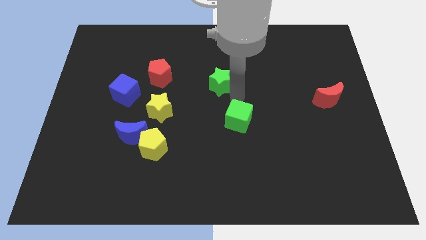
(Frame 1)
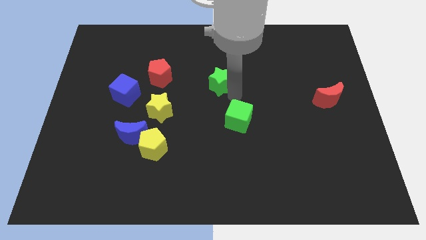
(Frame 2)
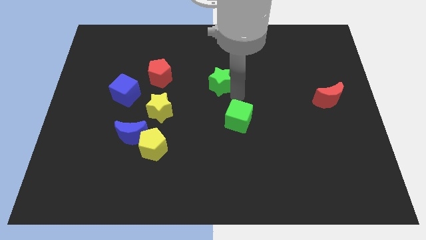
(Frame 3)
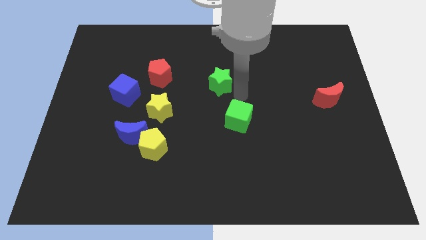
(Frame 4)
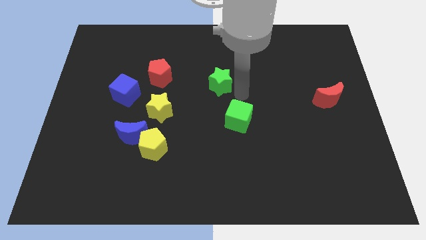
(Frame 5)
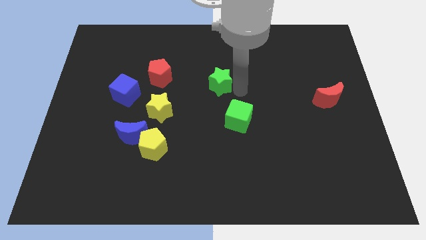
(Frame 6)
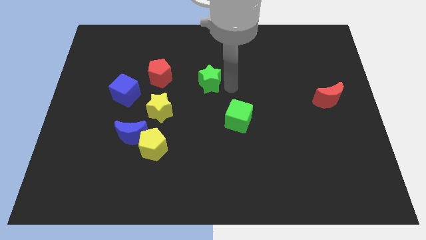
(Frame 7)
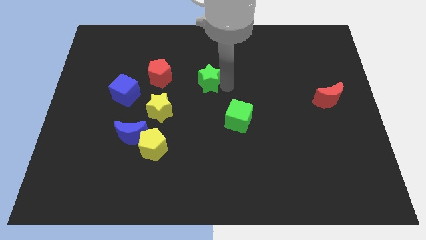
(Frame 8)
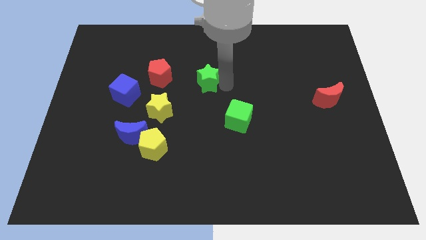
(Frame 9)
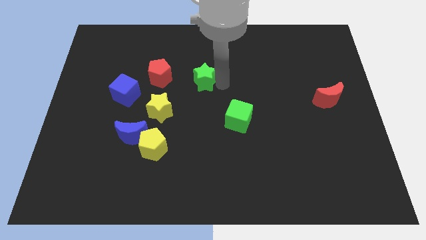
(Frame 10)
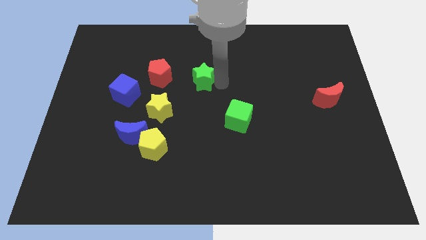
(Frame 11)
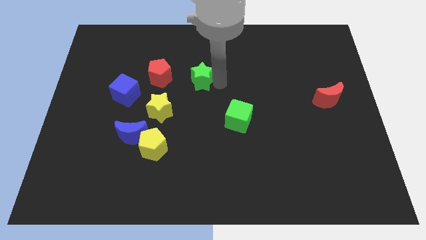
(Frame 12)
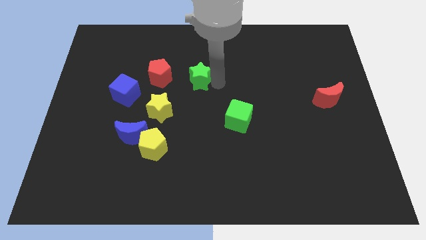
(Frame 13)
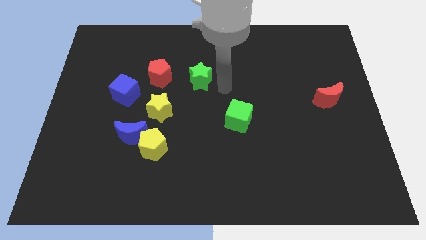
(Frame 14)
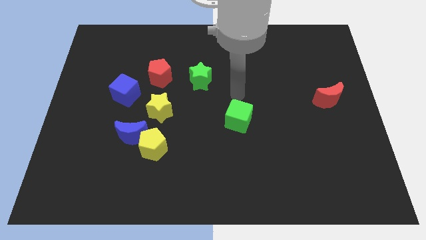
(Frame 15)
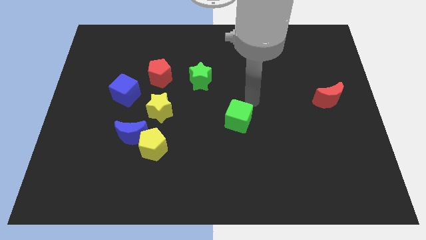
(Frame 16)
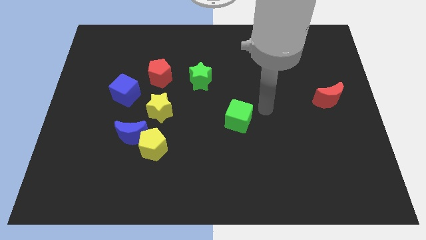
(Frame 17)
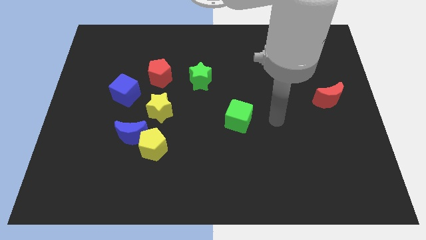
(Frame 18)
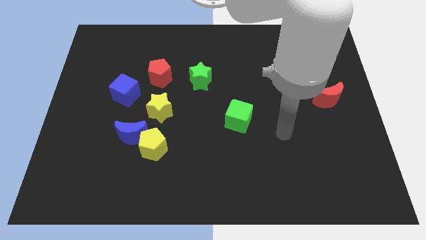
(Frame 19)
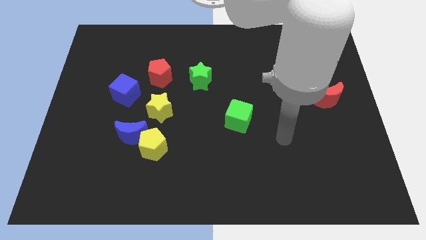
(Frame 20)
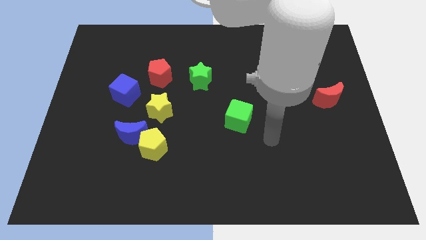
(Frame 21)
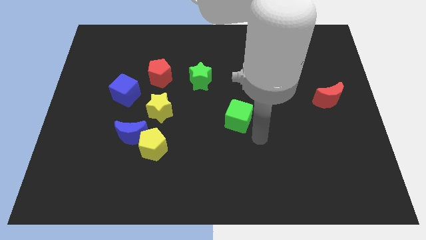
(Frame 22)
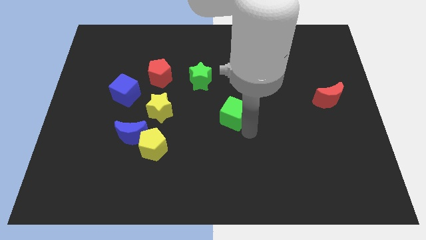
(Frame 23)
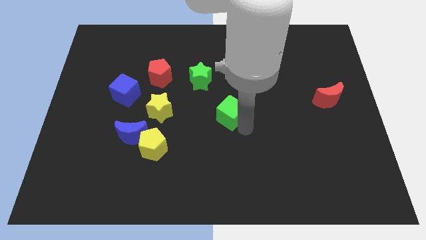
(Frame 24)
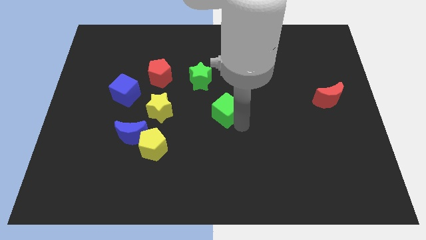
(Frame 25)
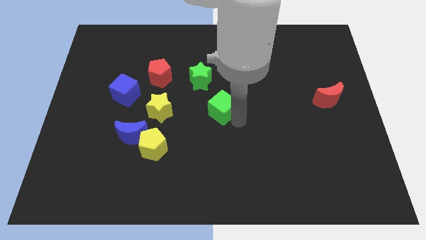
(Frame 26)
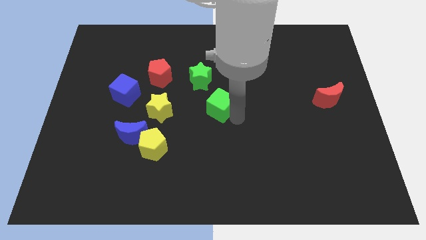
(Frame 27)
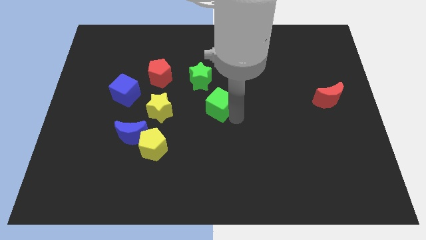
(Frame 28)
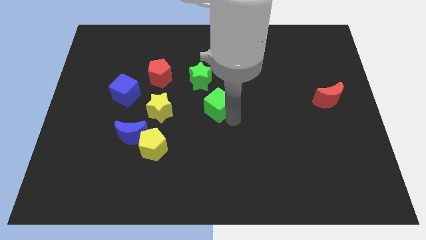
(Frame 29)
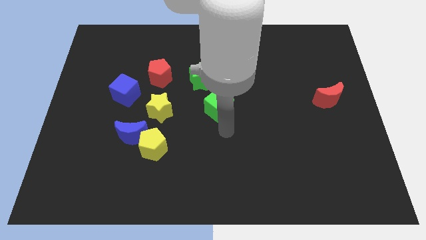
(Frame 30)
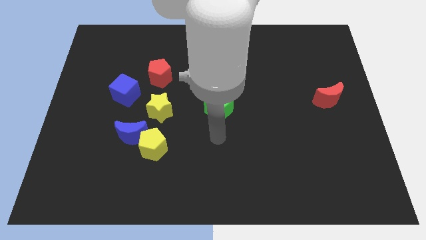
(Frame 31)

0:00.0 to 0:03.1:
push green cube beside yellow star

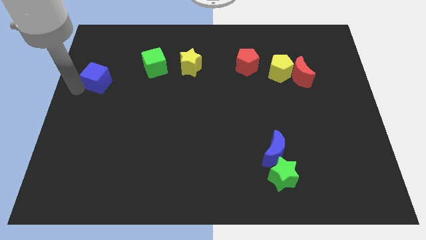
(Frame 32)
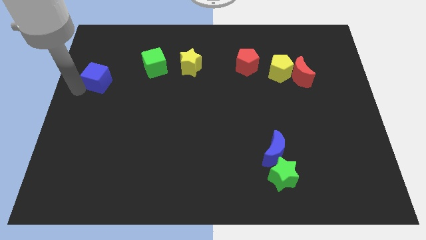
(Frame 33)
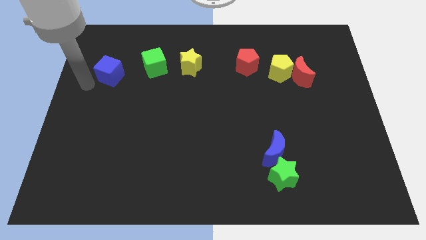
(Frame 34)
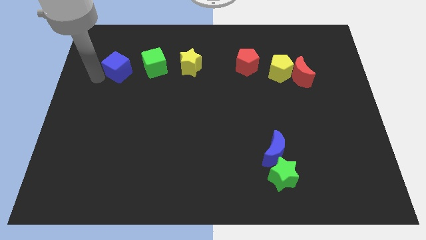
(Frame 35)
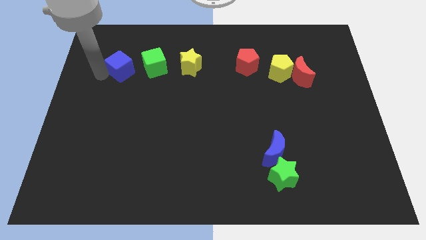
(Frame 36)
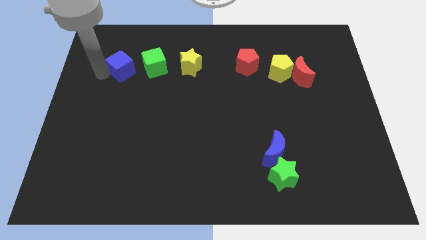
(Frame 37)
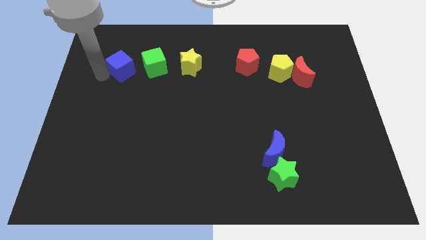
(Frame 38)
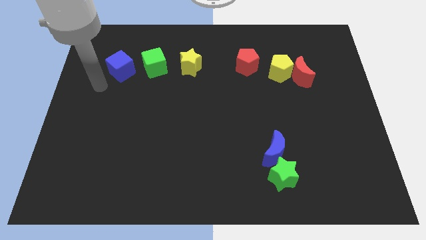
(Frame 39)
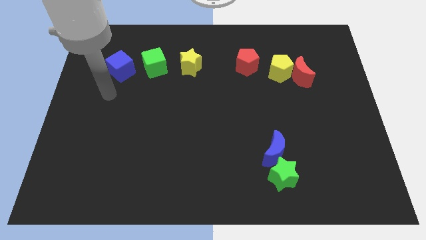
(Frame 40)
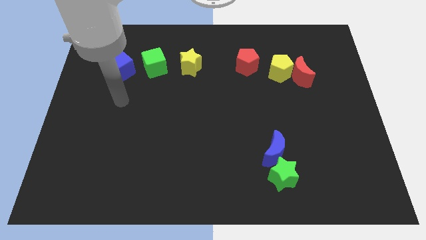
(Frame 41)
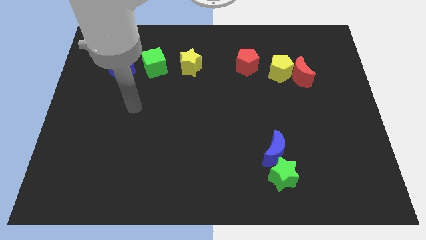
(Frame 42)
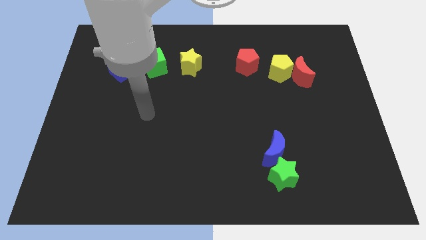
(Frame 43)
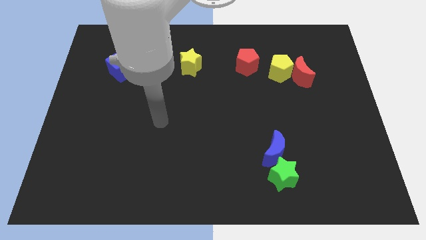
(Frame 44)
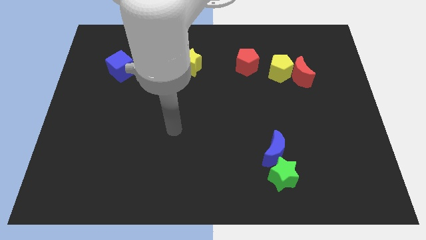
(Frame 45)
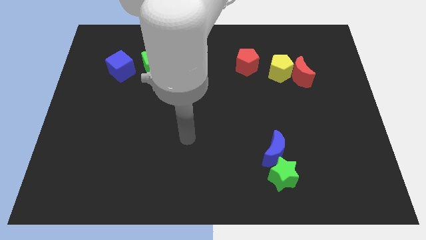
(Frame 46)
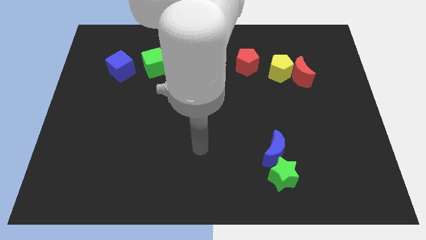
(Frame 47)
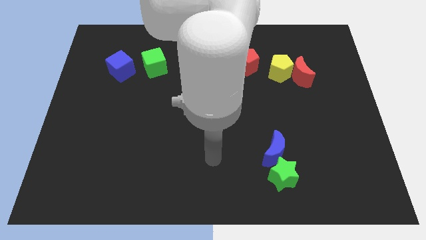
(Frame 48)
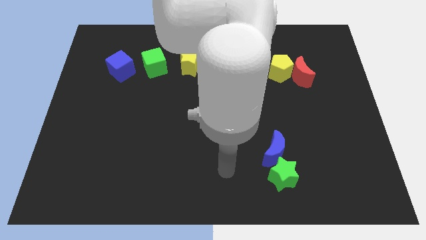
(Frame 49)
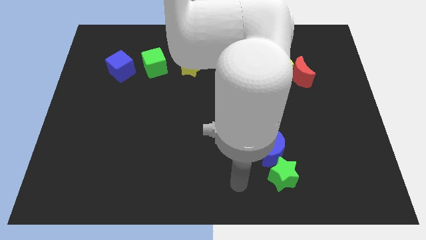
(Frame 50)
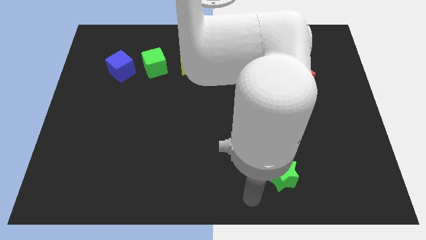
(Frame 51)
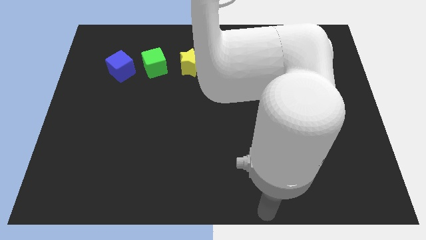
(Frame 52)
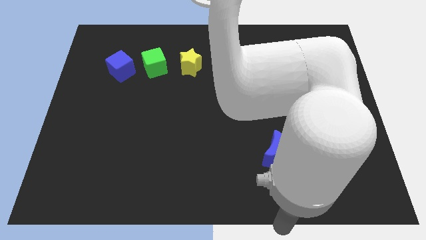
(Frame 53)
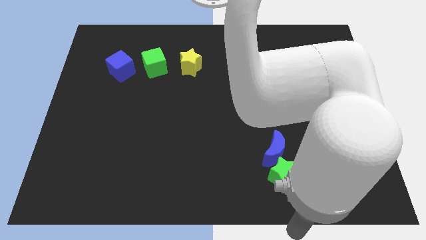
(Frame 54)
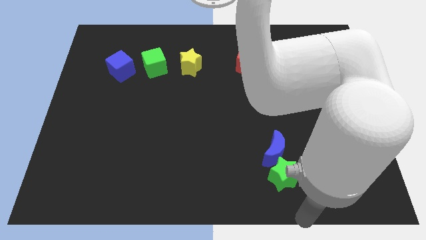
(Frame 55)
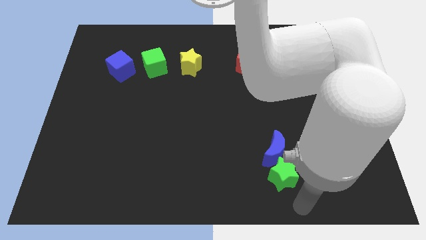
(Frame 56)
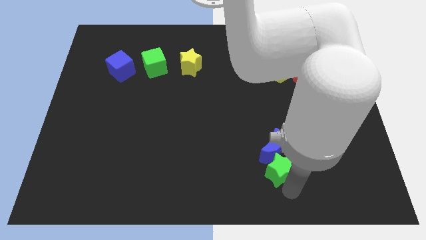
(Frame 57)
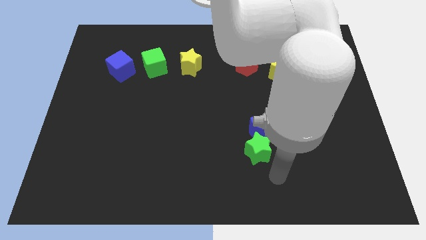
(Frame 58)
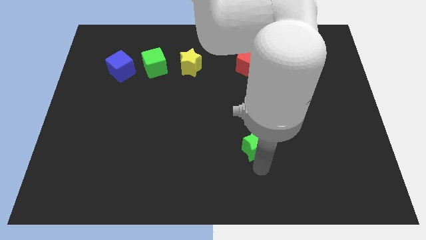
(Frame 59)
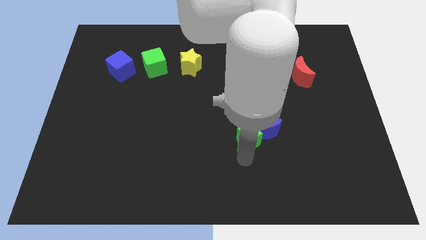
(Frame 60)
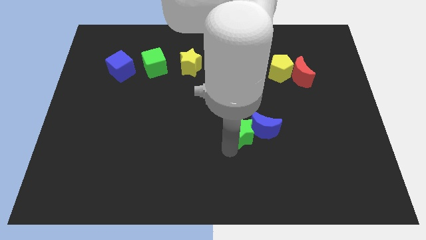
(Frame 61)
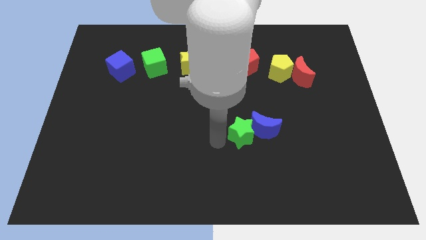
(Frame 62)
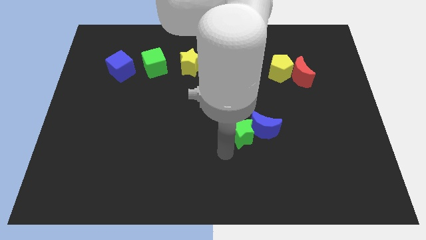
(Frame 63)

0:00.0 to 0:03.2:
move the green star and blue moon towards the center of the board

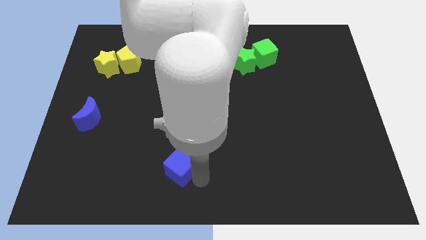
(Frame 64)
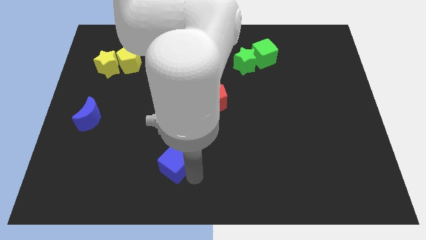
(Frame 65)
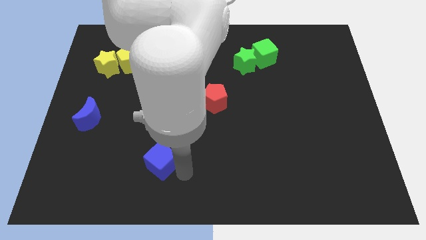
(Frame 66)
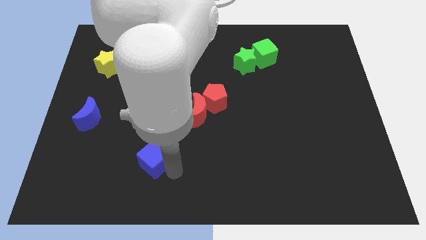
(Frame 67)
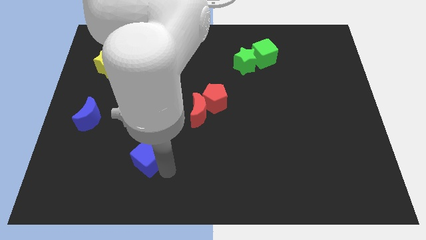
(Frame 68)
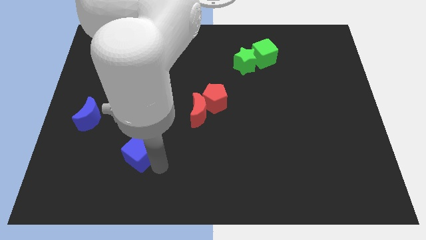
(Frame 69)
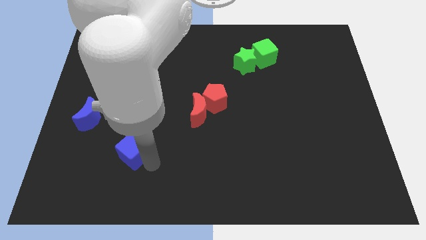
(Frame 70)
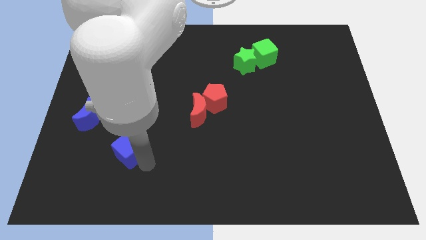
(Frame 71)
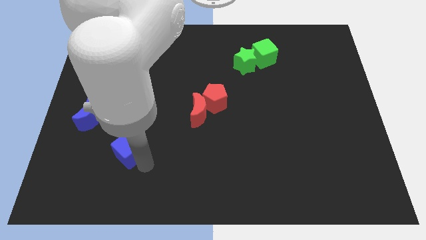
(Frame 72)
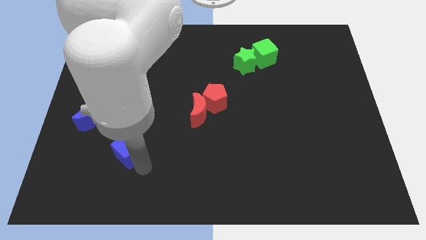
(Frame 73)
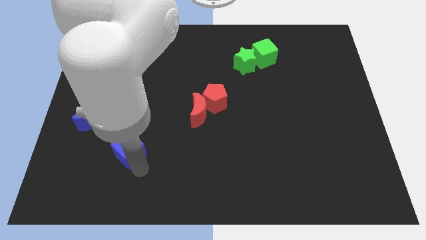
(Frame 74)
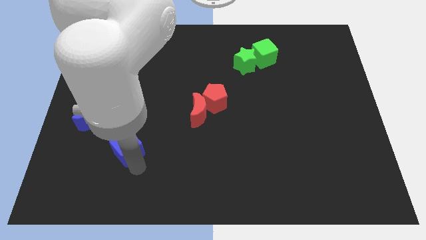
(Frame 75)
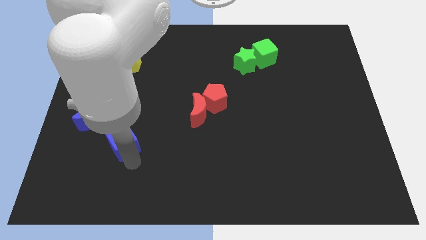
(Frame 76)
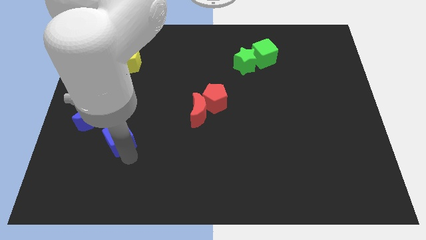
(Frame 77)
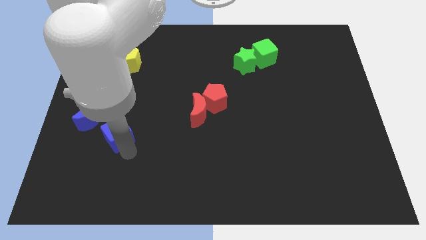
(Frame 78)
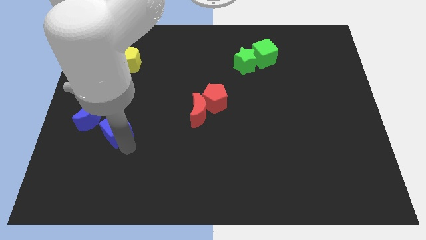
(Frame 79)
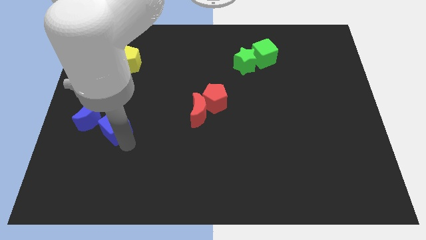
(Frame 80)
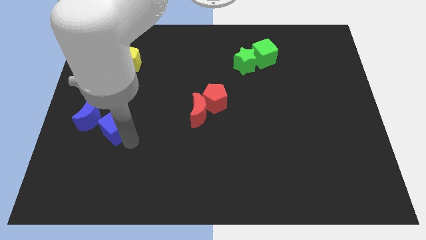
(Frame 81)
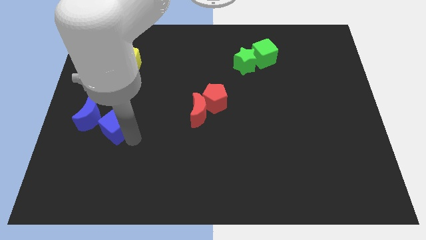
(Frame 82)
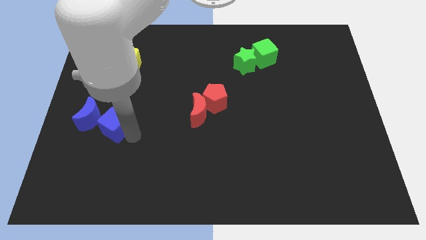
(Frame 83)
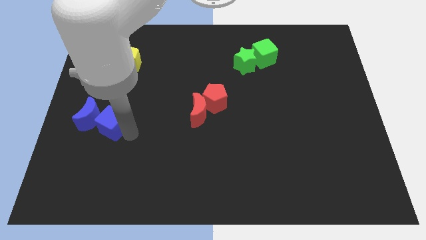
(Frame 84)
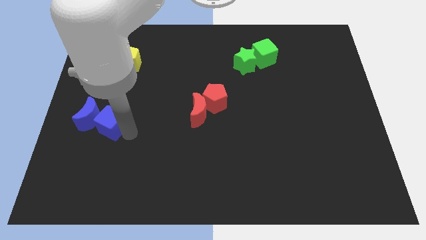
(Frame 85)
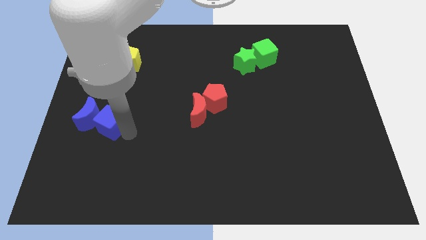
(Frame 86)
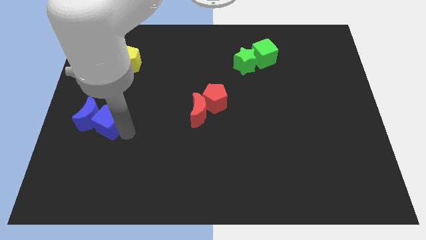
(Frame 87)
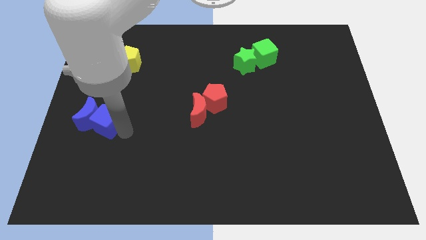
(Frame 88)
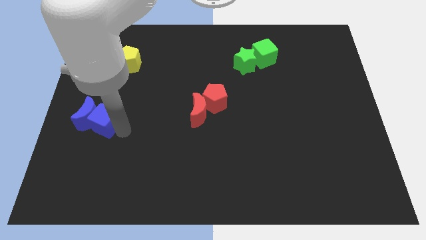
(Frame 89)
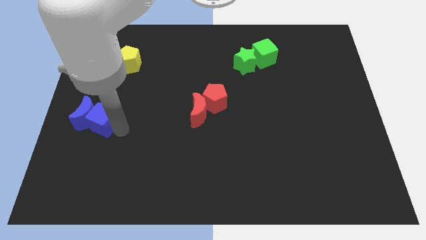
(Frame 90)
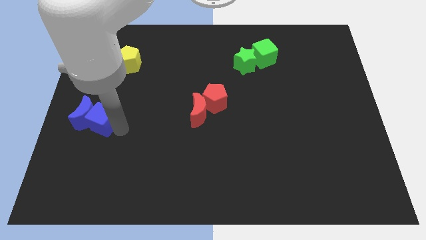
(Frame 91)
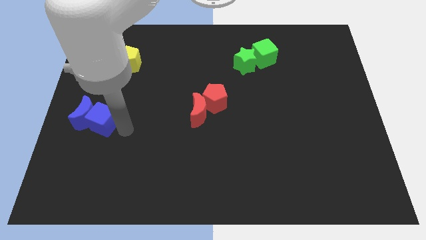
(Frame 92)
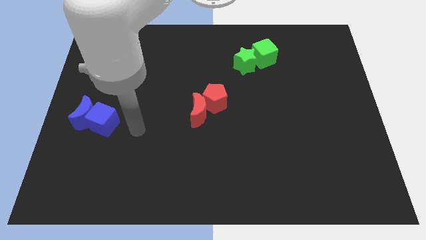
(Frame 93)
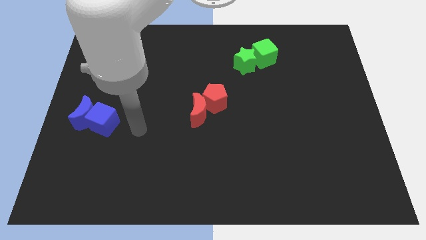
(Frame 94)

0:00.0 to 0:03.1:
place the blue cube towards blue crescent
